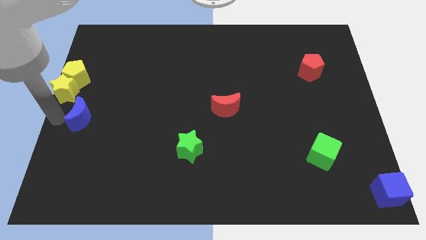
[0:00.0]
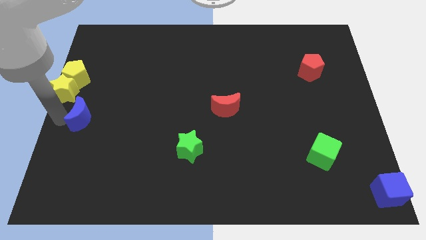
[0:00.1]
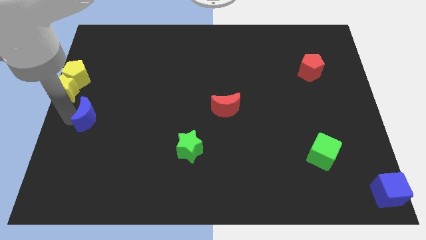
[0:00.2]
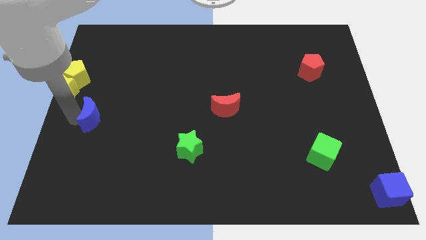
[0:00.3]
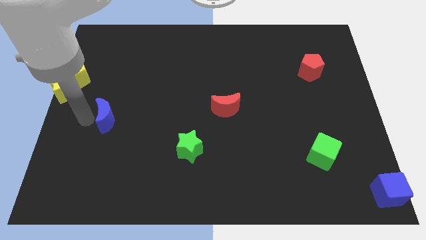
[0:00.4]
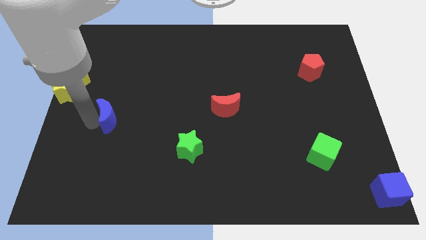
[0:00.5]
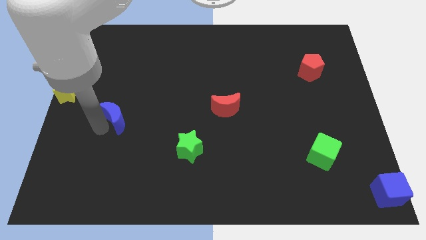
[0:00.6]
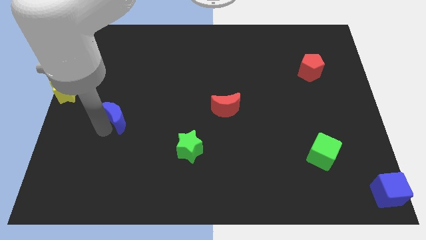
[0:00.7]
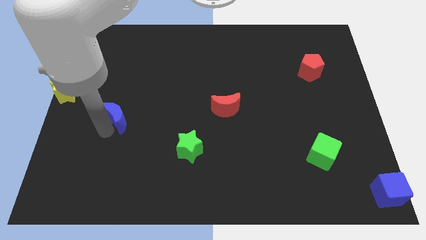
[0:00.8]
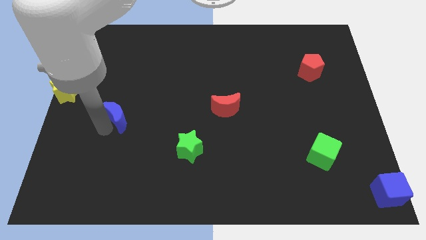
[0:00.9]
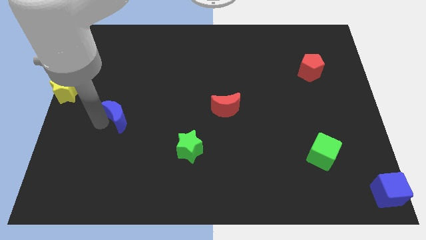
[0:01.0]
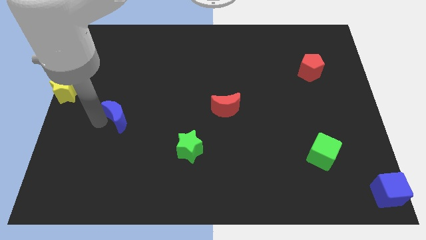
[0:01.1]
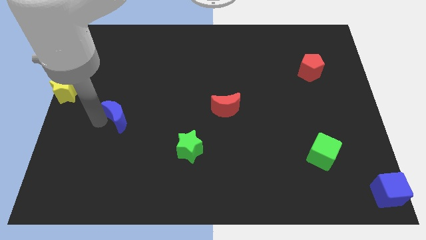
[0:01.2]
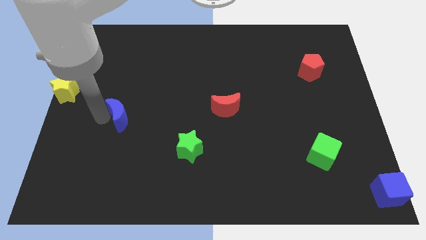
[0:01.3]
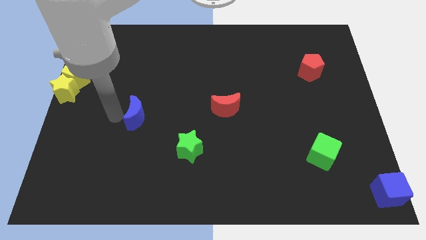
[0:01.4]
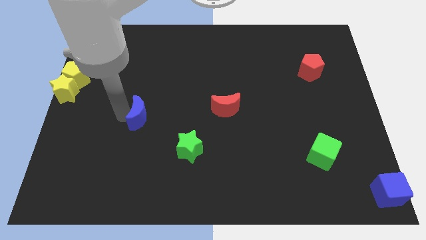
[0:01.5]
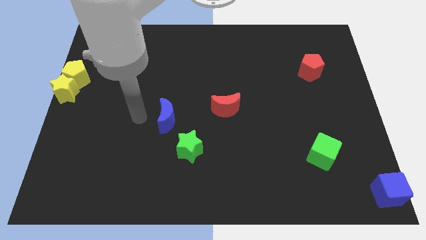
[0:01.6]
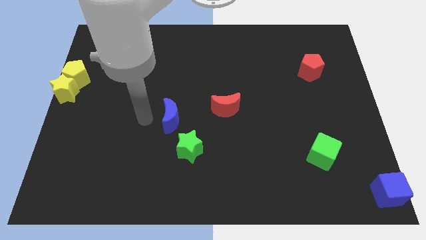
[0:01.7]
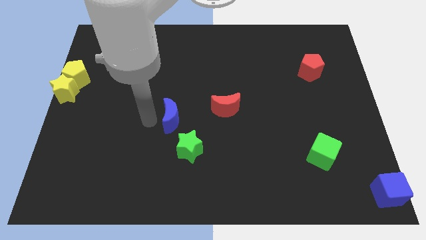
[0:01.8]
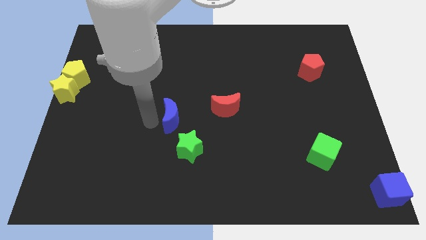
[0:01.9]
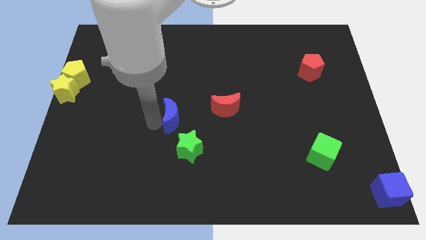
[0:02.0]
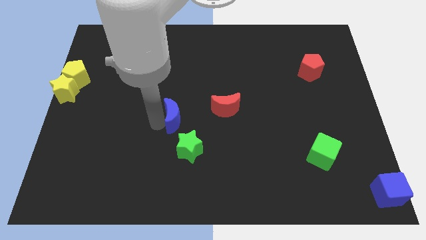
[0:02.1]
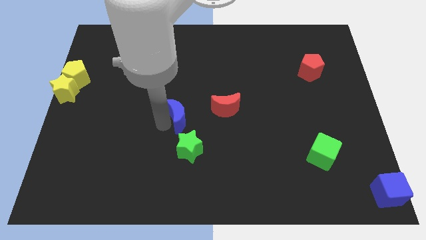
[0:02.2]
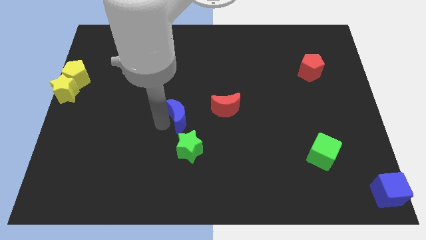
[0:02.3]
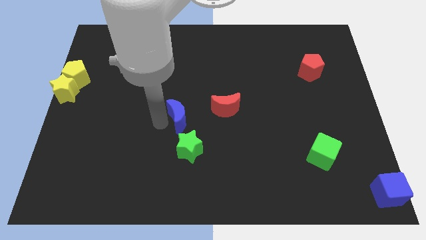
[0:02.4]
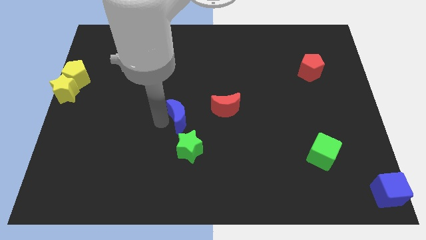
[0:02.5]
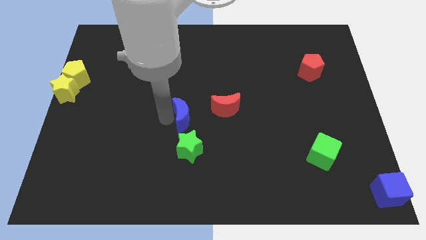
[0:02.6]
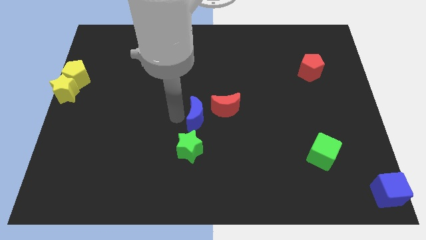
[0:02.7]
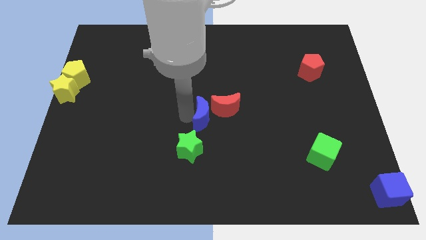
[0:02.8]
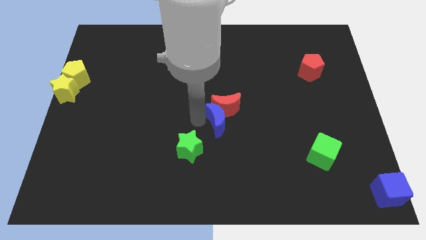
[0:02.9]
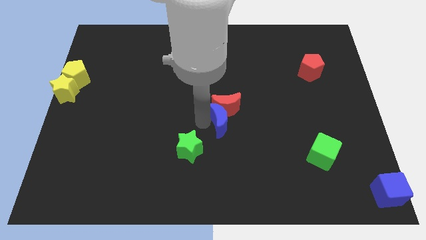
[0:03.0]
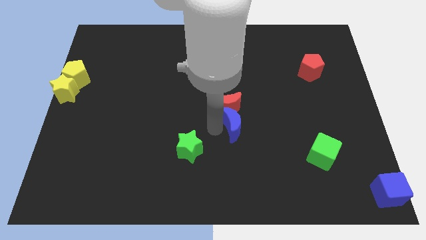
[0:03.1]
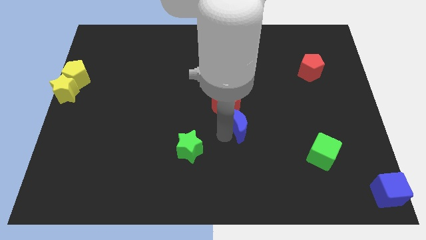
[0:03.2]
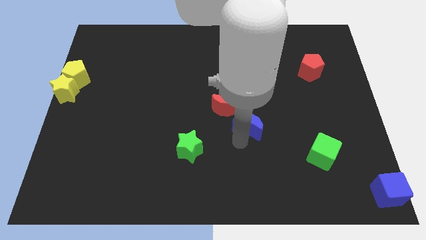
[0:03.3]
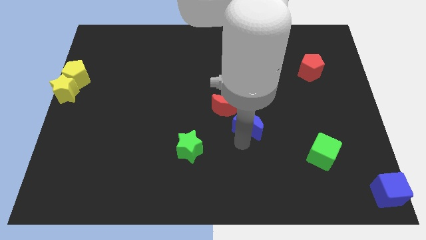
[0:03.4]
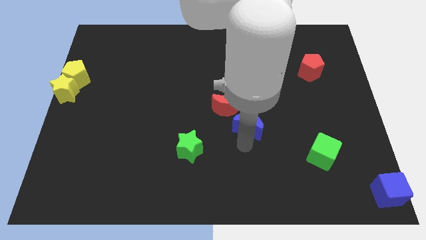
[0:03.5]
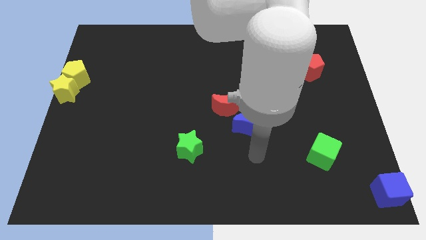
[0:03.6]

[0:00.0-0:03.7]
move the blue moon to the bottom side of the red crescent

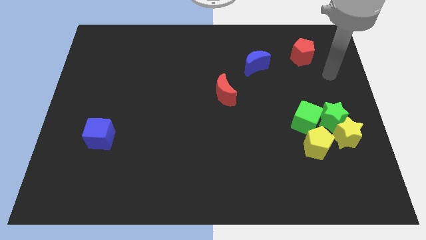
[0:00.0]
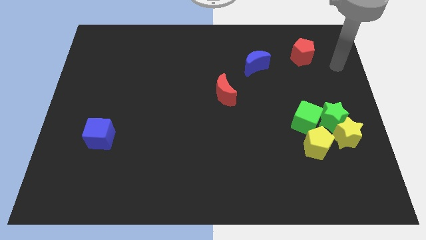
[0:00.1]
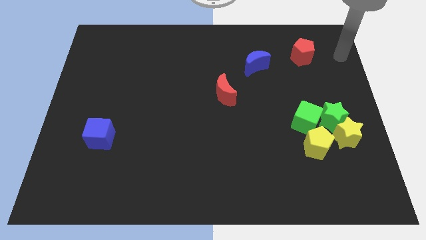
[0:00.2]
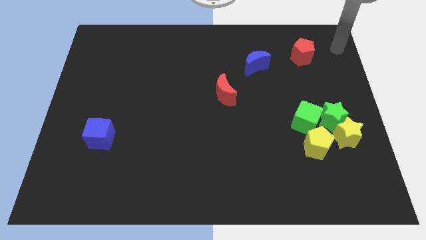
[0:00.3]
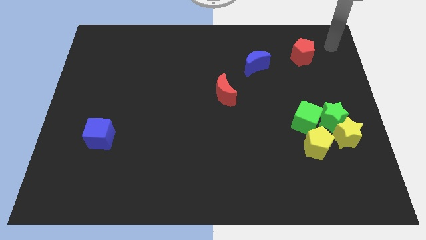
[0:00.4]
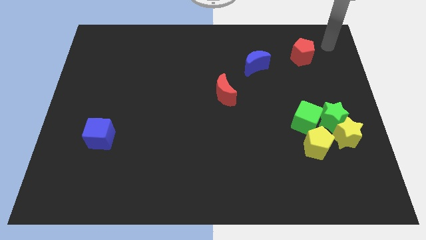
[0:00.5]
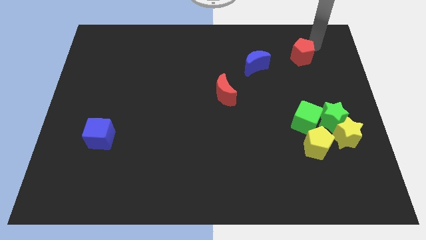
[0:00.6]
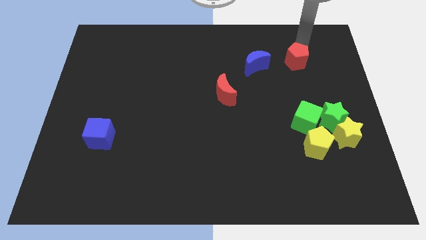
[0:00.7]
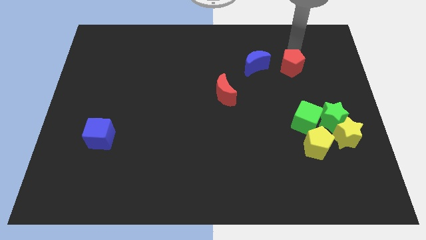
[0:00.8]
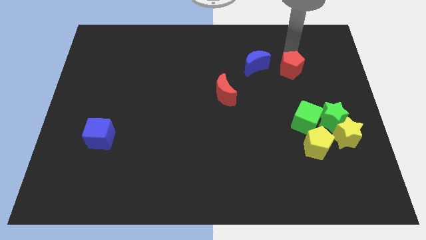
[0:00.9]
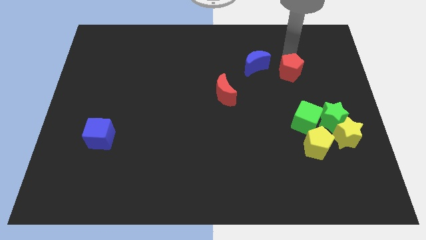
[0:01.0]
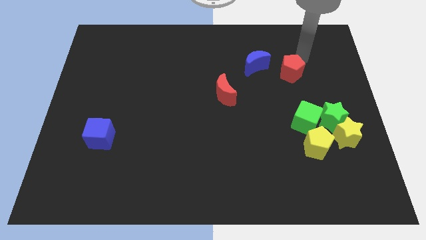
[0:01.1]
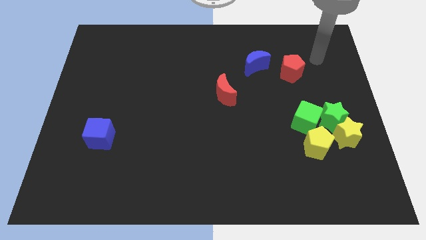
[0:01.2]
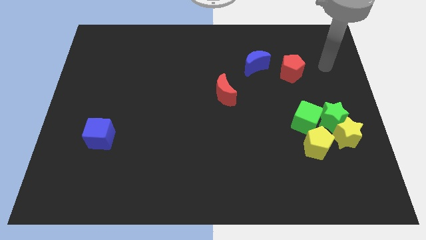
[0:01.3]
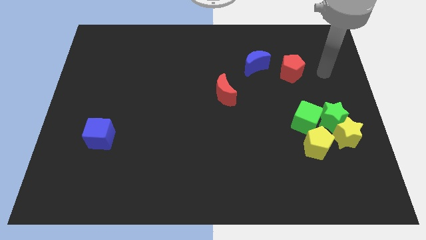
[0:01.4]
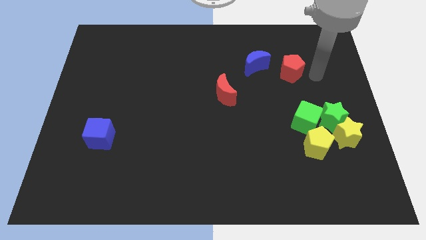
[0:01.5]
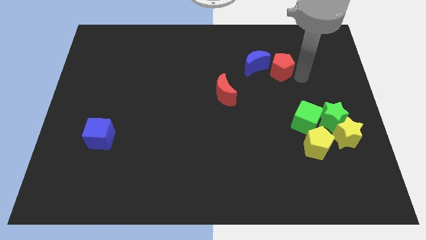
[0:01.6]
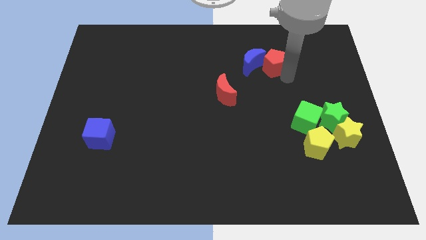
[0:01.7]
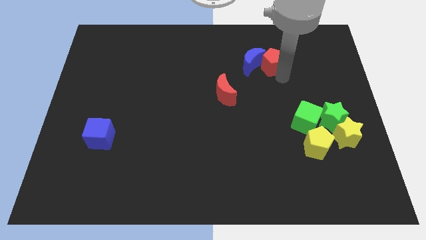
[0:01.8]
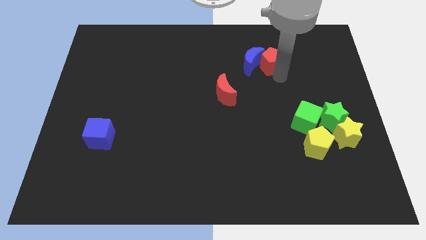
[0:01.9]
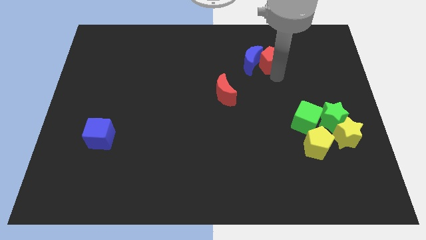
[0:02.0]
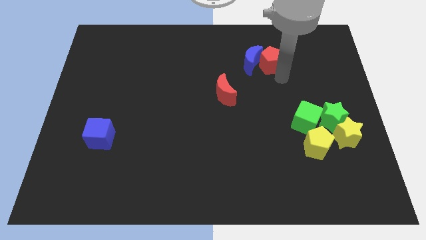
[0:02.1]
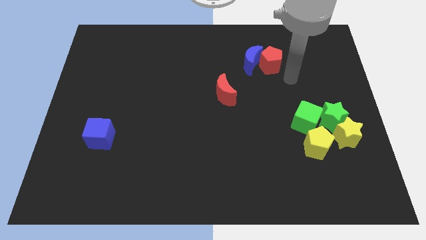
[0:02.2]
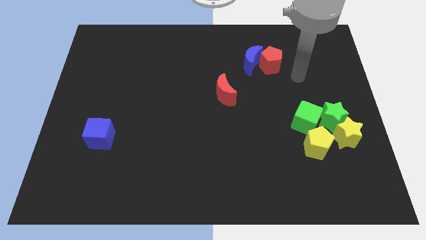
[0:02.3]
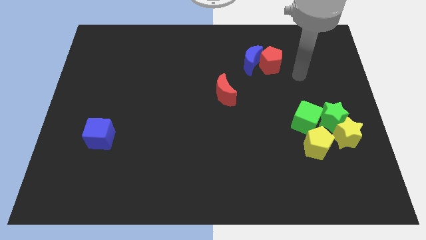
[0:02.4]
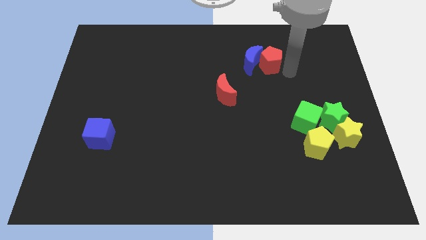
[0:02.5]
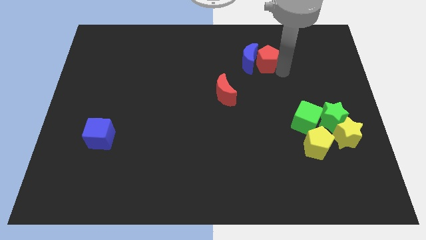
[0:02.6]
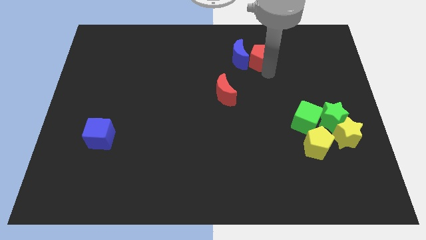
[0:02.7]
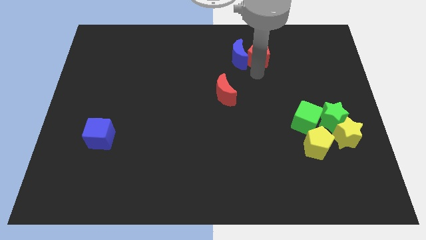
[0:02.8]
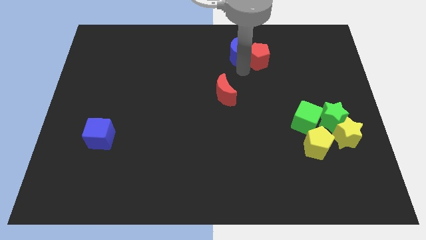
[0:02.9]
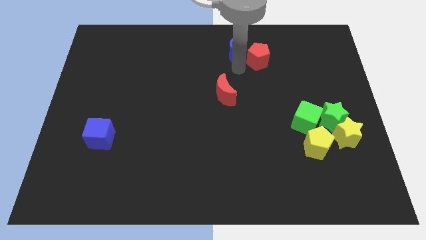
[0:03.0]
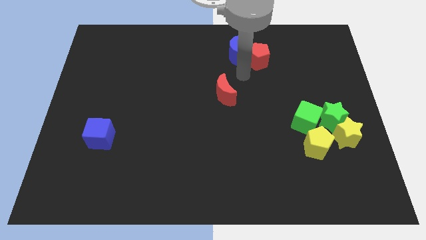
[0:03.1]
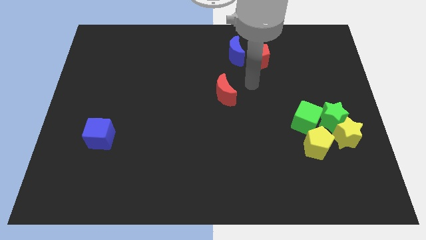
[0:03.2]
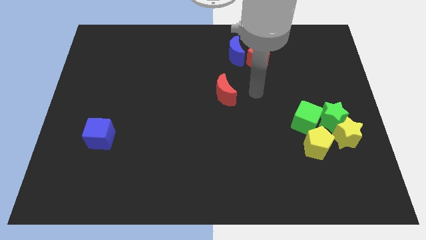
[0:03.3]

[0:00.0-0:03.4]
move the red pentagon to the right side of the blue crescent

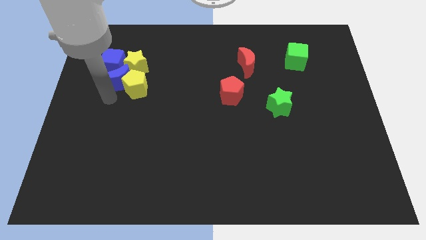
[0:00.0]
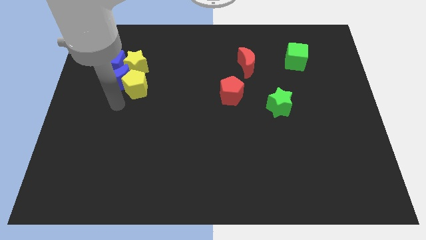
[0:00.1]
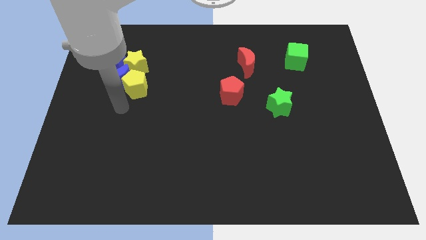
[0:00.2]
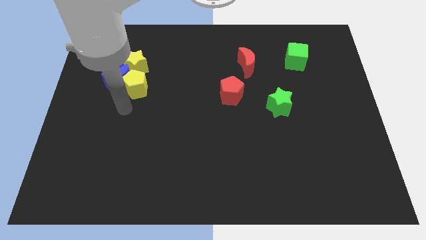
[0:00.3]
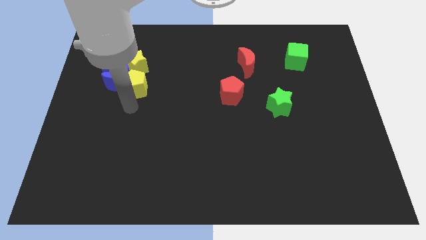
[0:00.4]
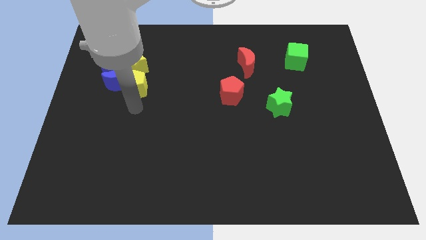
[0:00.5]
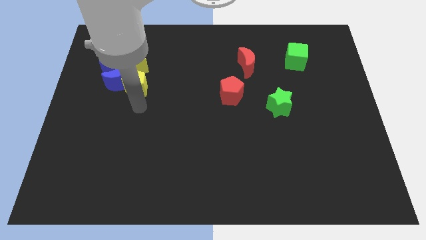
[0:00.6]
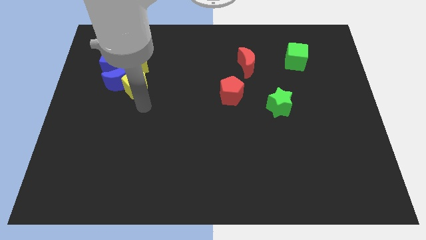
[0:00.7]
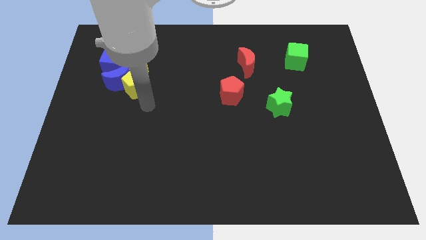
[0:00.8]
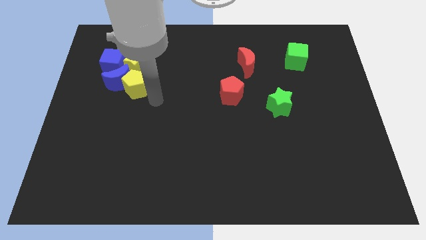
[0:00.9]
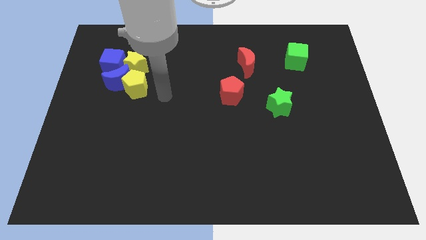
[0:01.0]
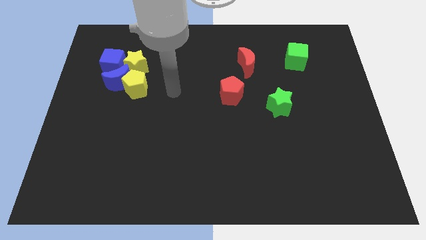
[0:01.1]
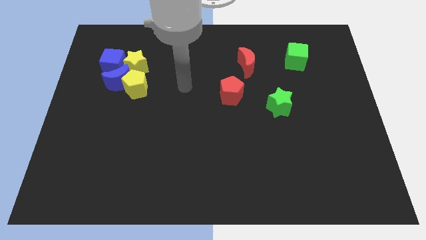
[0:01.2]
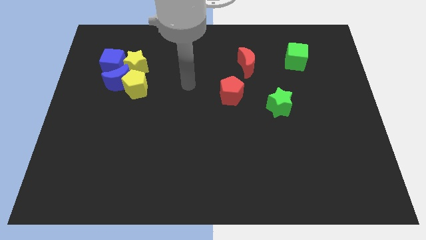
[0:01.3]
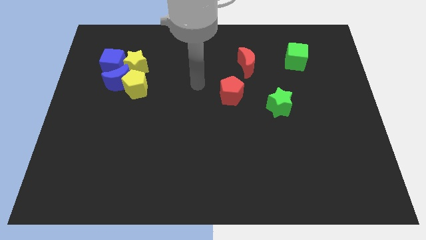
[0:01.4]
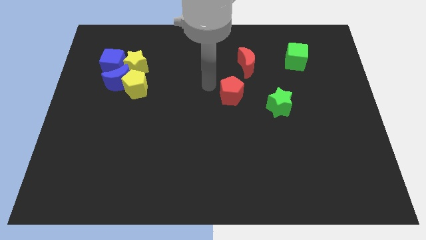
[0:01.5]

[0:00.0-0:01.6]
move your arm to the left of the red pentagon

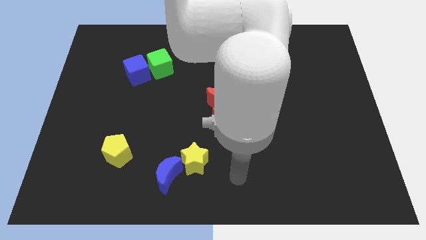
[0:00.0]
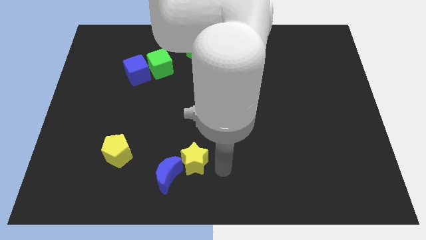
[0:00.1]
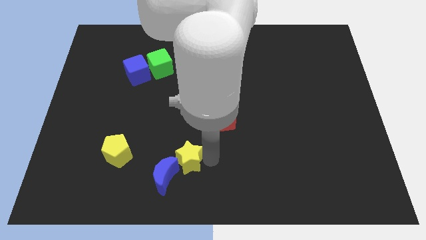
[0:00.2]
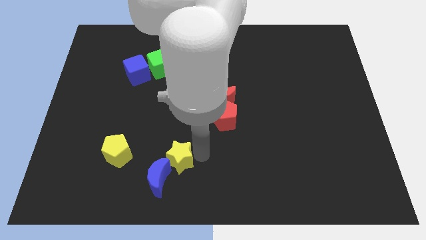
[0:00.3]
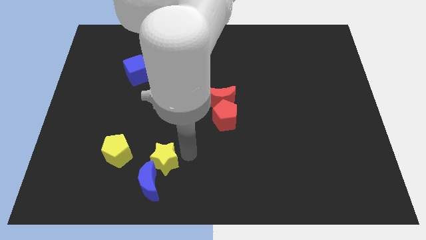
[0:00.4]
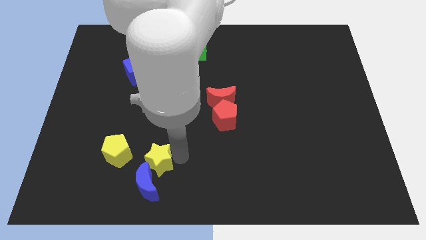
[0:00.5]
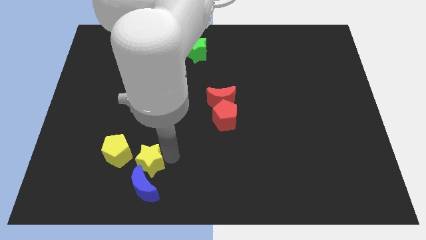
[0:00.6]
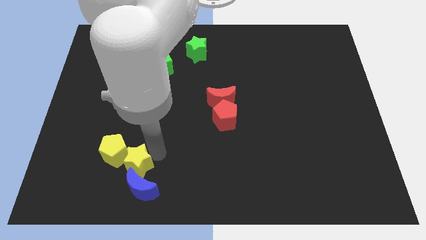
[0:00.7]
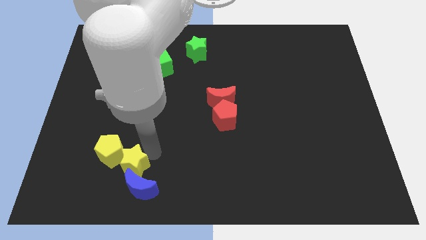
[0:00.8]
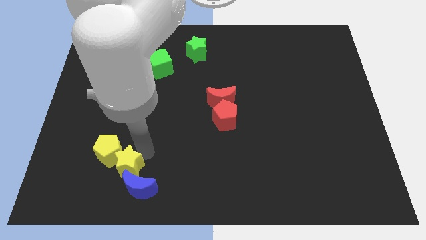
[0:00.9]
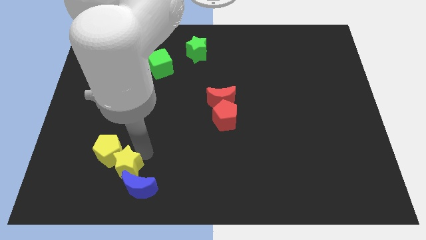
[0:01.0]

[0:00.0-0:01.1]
push the yellow star into the yellow pentagon
